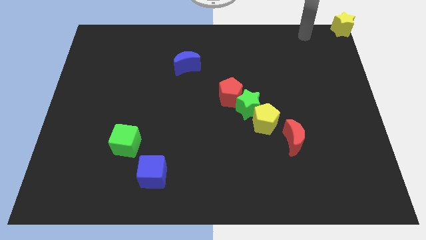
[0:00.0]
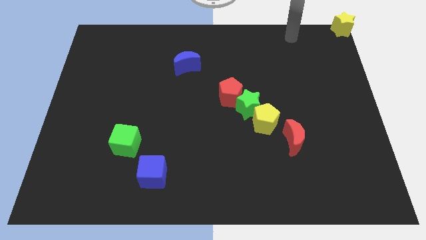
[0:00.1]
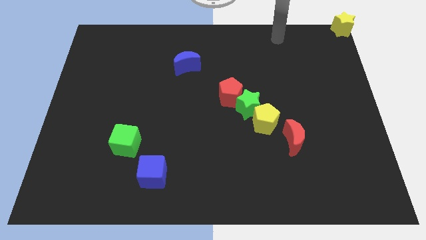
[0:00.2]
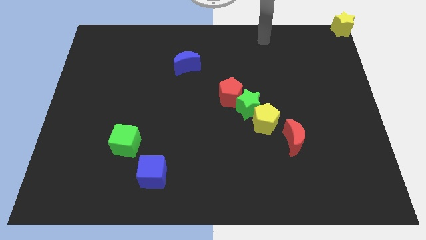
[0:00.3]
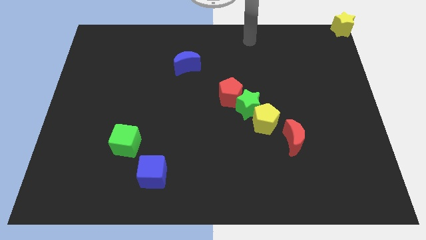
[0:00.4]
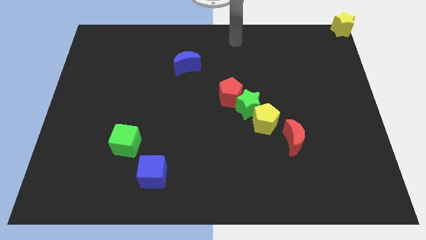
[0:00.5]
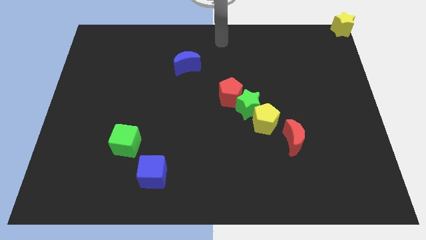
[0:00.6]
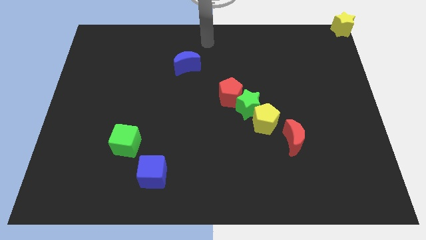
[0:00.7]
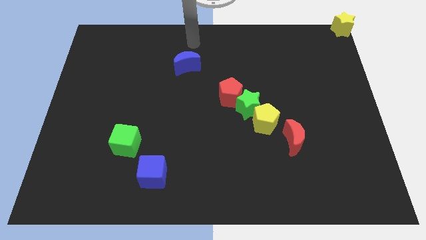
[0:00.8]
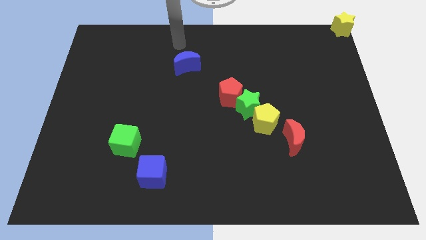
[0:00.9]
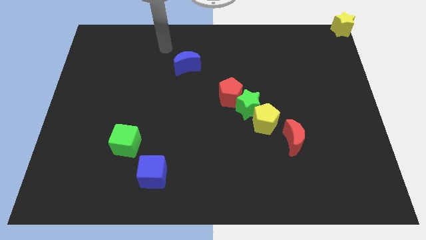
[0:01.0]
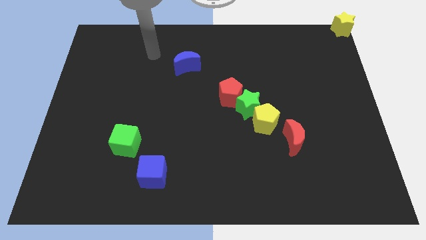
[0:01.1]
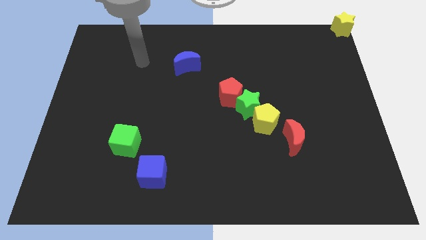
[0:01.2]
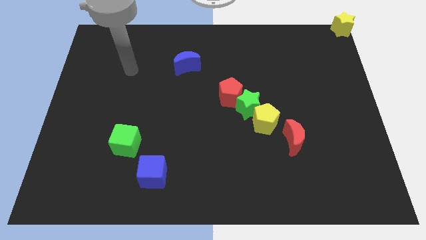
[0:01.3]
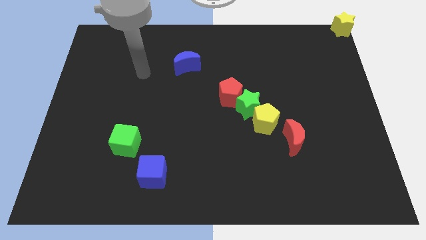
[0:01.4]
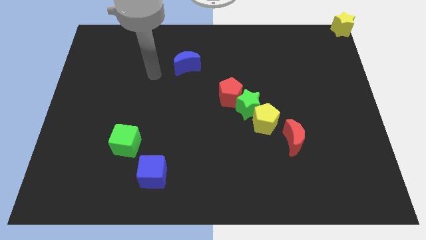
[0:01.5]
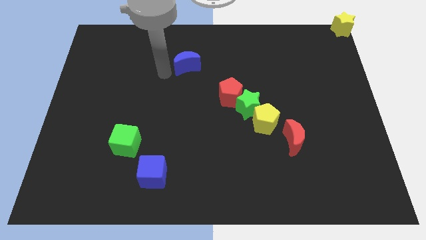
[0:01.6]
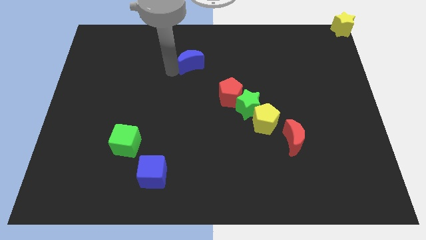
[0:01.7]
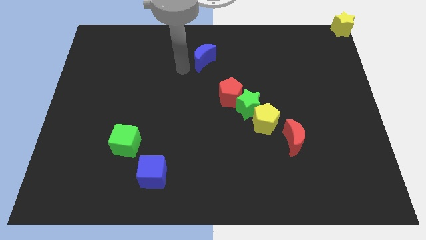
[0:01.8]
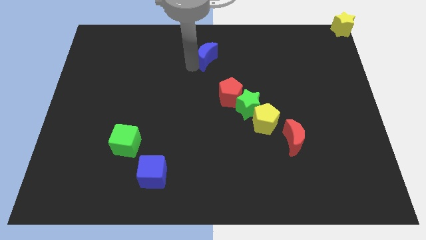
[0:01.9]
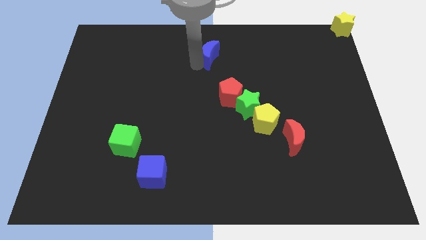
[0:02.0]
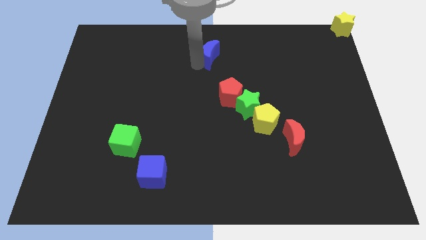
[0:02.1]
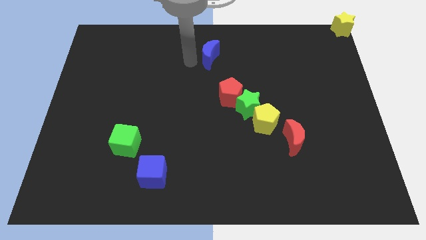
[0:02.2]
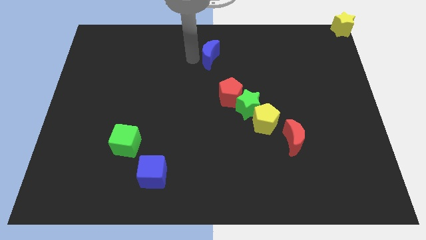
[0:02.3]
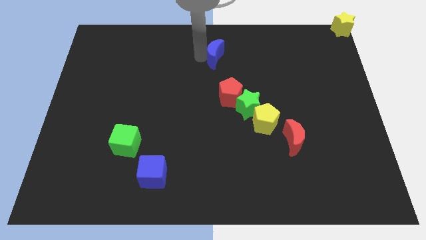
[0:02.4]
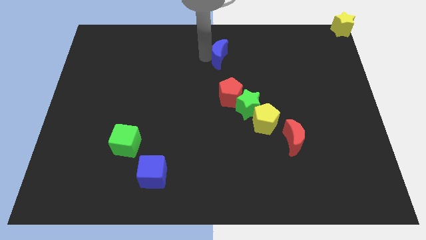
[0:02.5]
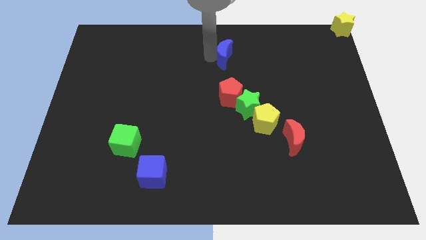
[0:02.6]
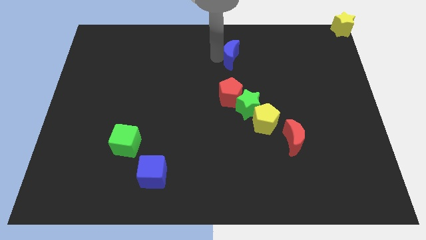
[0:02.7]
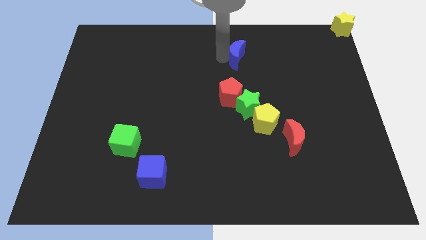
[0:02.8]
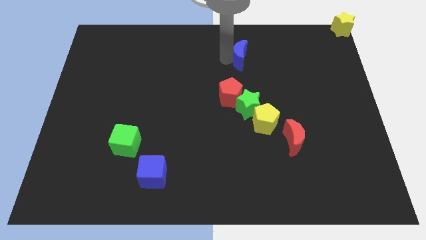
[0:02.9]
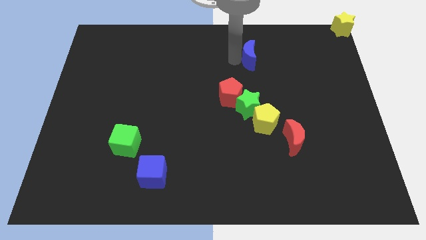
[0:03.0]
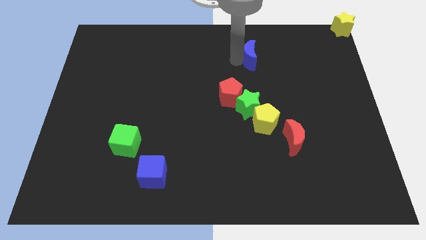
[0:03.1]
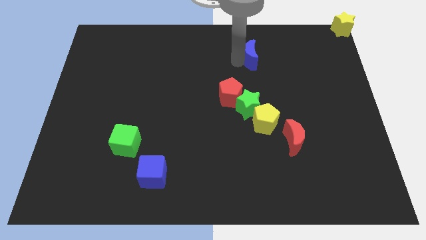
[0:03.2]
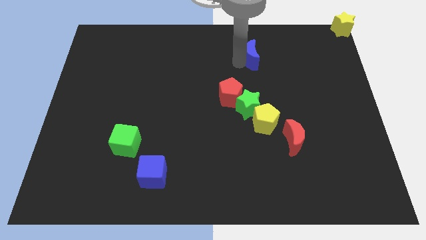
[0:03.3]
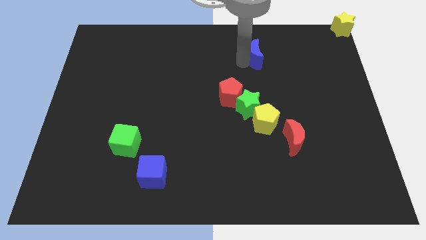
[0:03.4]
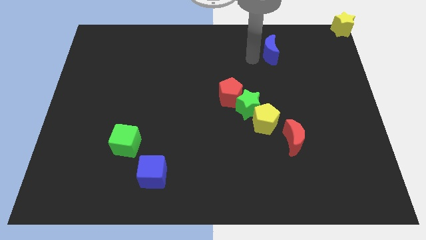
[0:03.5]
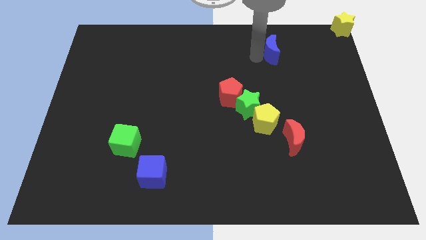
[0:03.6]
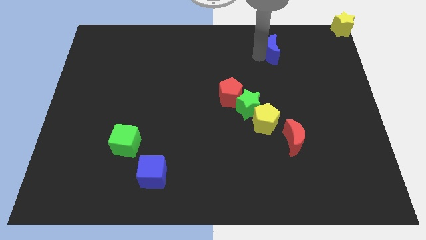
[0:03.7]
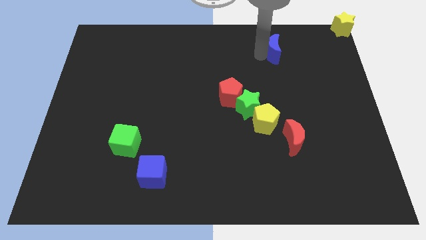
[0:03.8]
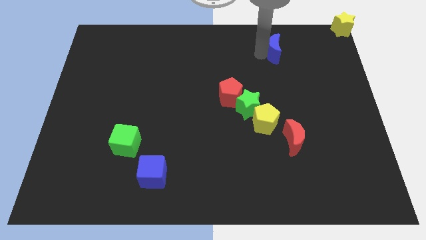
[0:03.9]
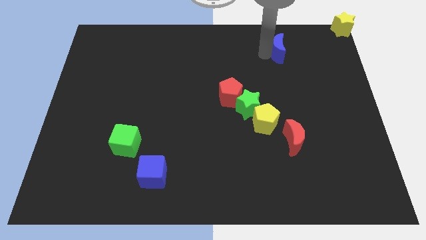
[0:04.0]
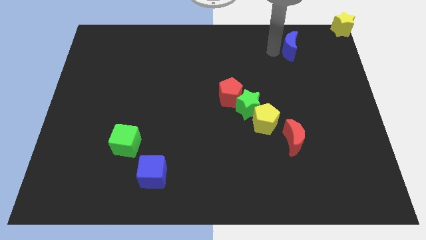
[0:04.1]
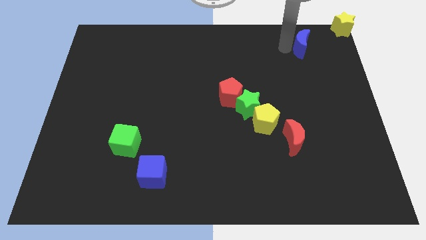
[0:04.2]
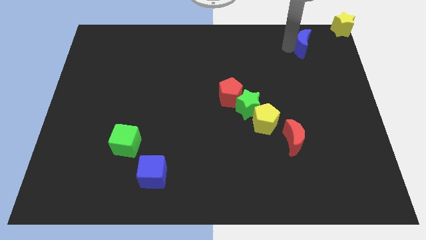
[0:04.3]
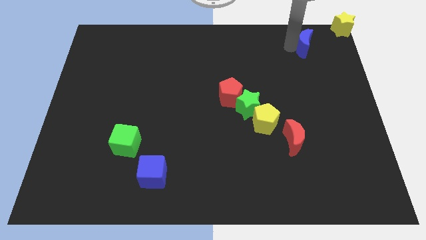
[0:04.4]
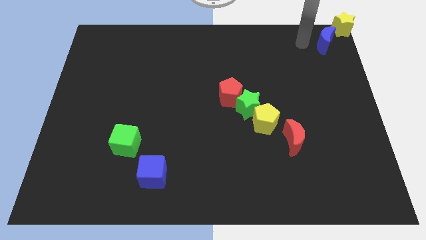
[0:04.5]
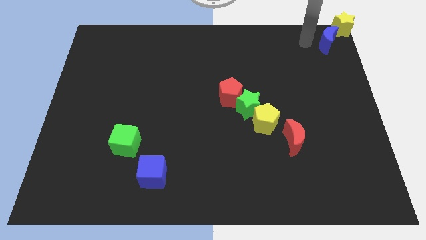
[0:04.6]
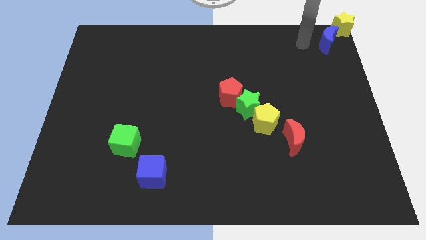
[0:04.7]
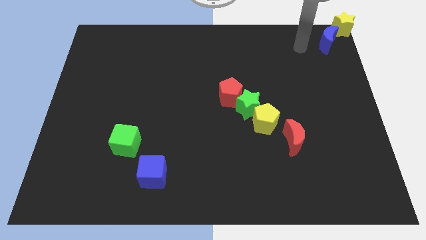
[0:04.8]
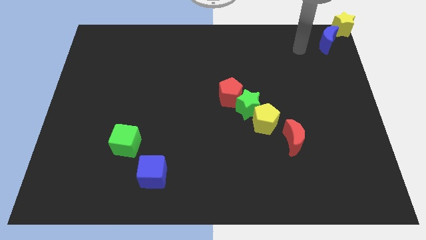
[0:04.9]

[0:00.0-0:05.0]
push the blue crescent to the top right of the board

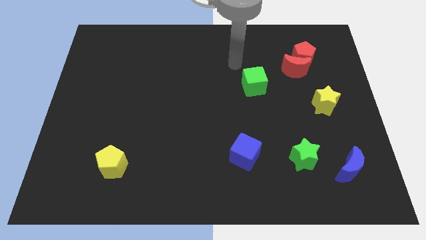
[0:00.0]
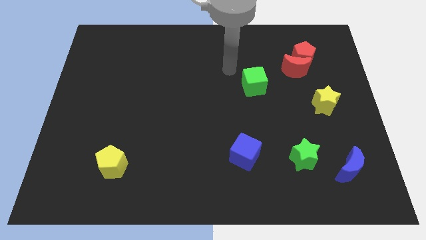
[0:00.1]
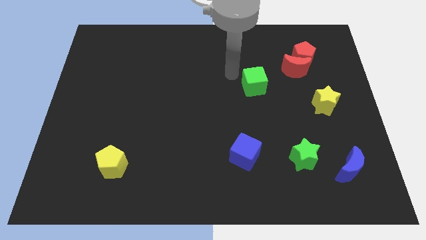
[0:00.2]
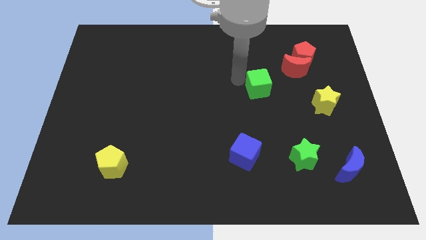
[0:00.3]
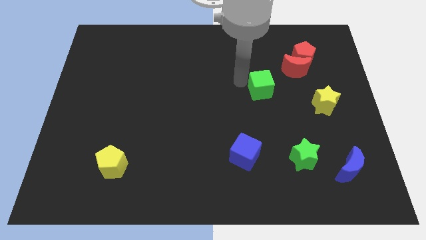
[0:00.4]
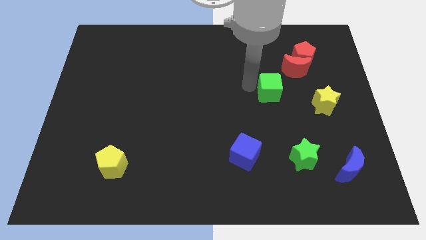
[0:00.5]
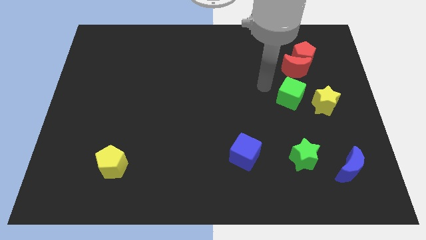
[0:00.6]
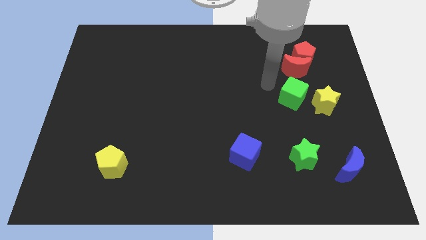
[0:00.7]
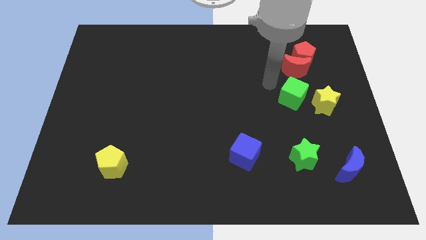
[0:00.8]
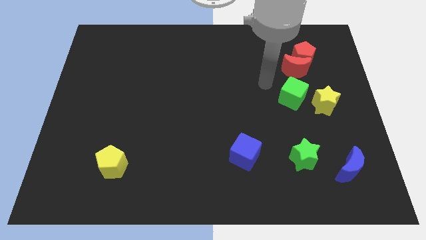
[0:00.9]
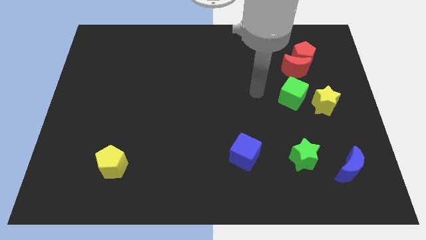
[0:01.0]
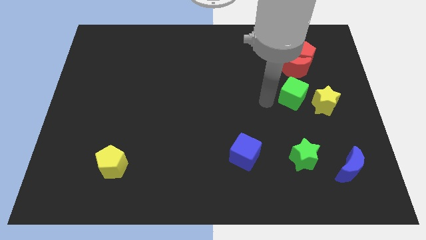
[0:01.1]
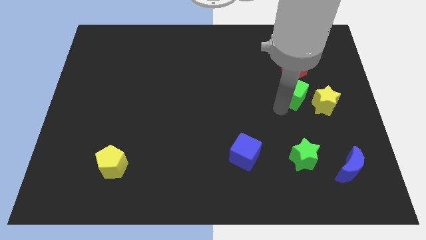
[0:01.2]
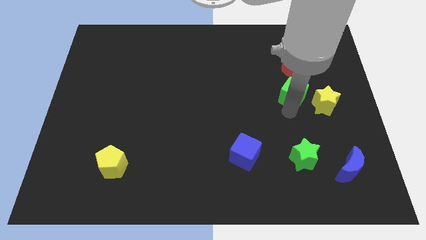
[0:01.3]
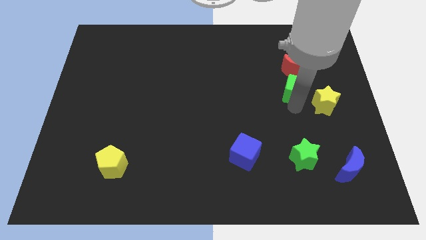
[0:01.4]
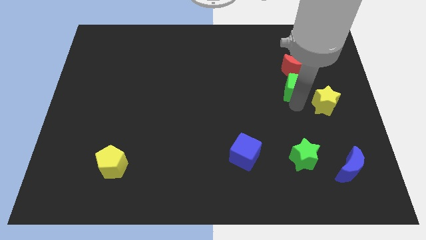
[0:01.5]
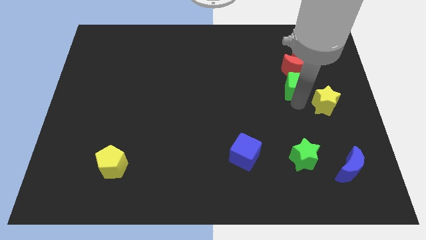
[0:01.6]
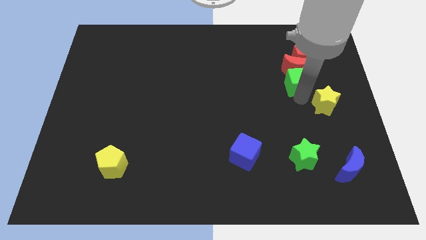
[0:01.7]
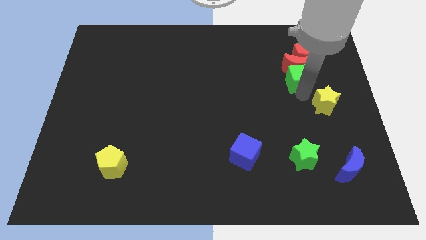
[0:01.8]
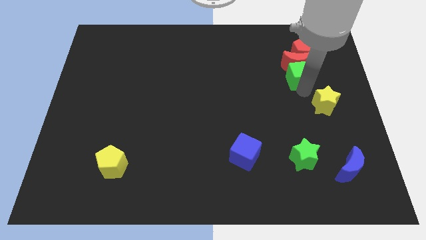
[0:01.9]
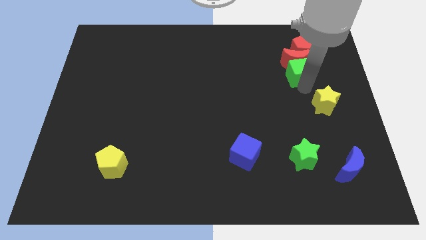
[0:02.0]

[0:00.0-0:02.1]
push the green cube into the red moon

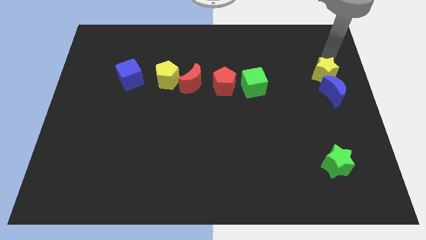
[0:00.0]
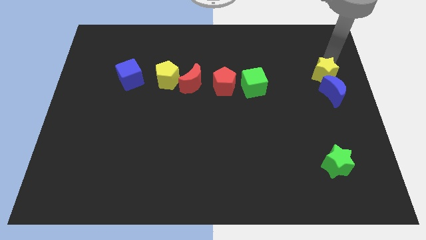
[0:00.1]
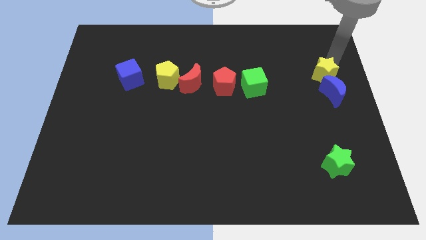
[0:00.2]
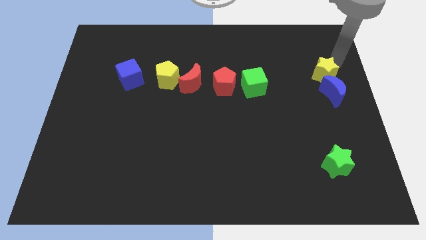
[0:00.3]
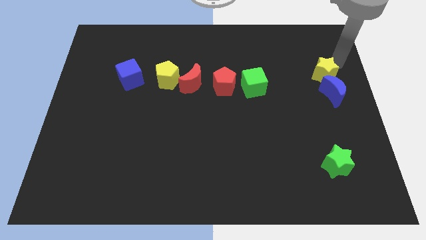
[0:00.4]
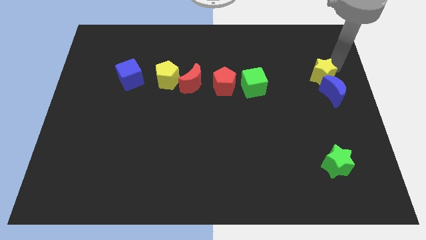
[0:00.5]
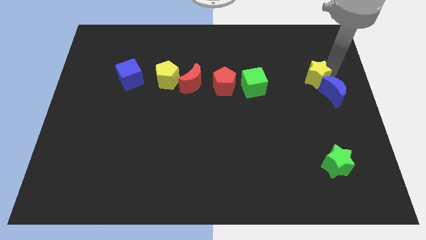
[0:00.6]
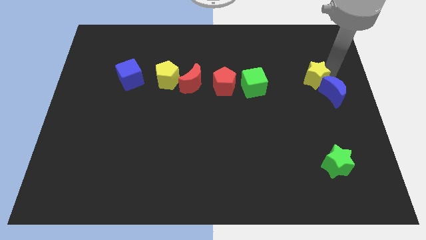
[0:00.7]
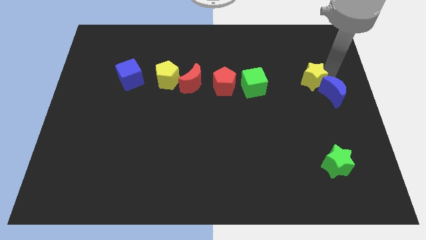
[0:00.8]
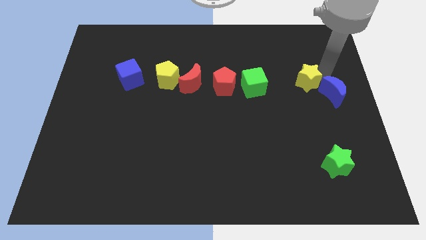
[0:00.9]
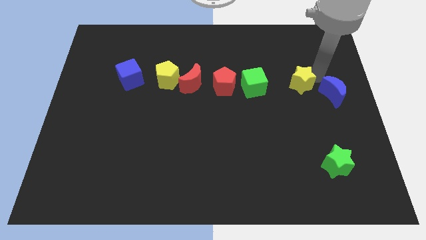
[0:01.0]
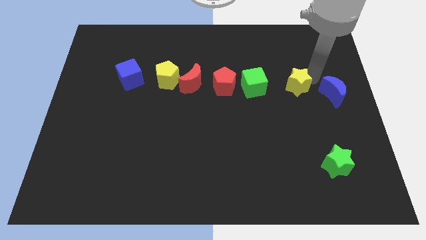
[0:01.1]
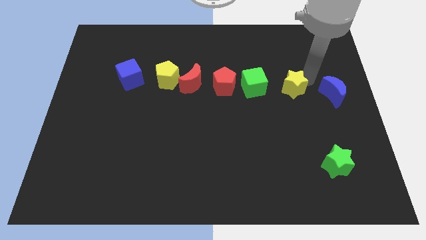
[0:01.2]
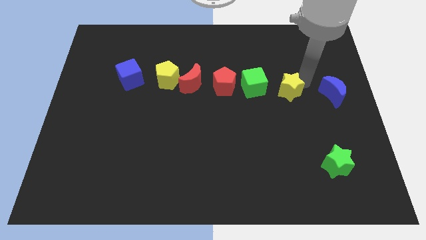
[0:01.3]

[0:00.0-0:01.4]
place the yellow star beside the green cube

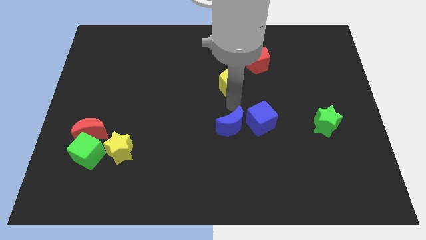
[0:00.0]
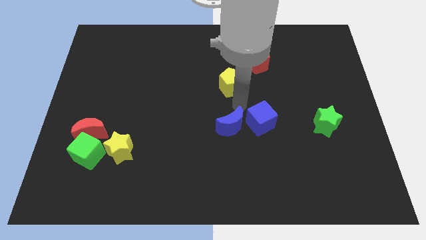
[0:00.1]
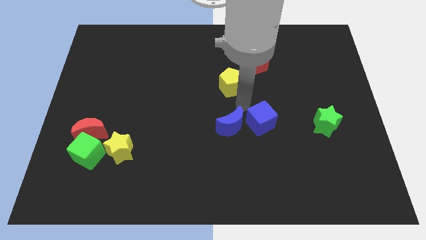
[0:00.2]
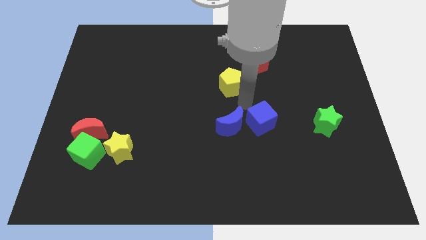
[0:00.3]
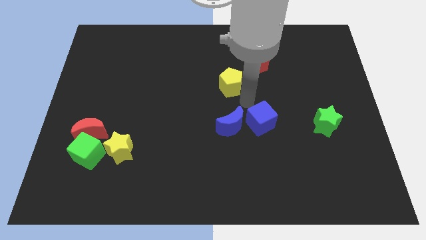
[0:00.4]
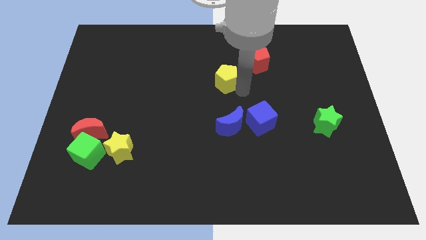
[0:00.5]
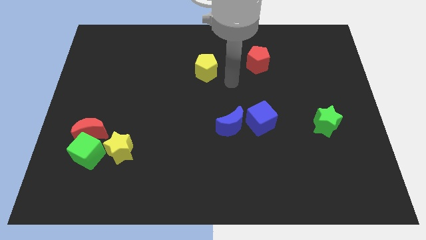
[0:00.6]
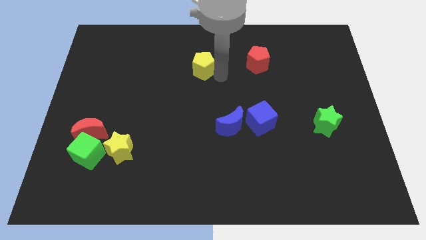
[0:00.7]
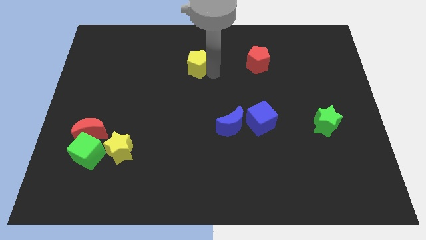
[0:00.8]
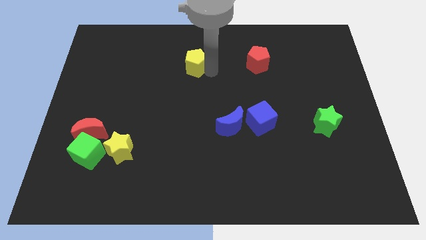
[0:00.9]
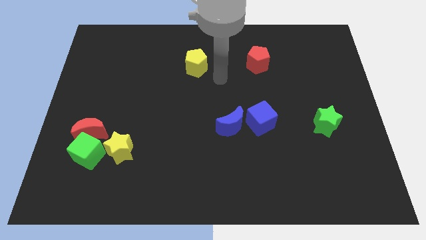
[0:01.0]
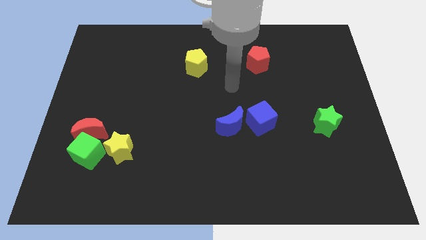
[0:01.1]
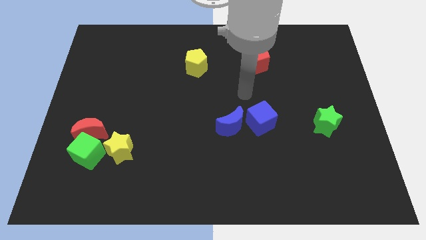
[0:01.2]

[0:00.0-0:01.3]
move the yellow pentagon to the top left of the board
